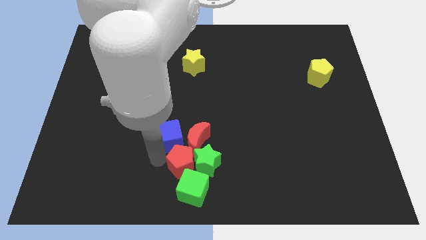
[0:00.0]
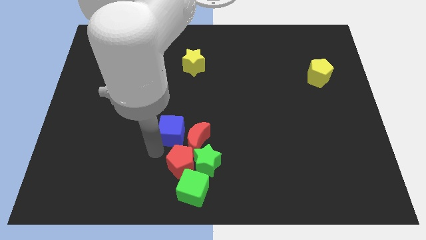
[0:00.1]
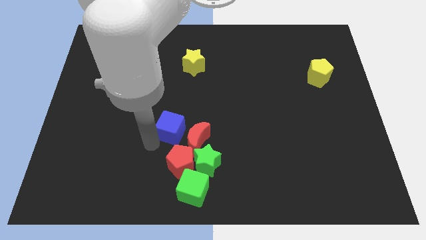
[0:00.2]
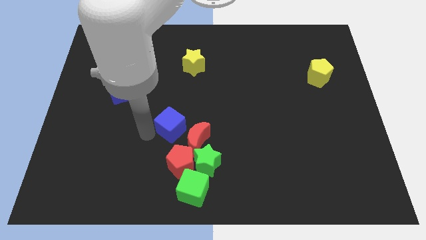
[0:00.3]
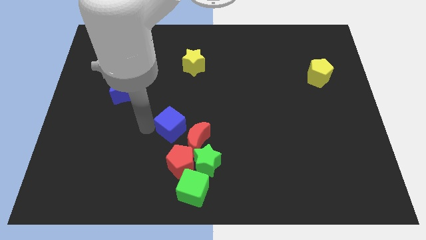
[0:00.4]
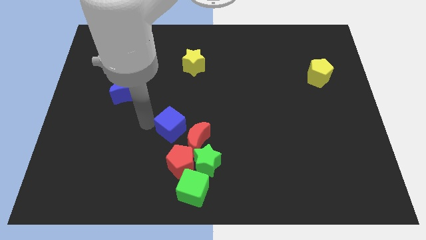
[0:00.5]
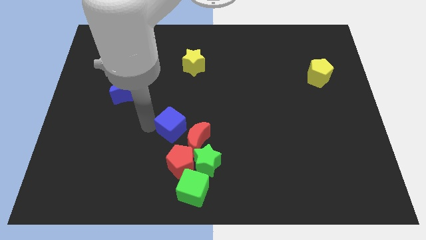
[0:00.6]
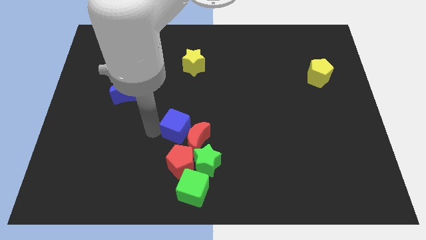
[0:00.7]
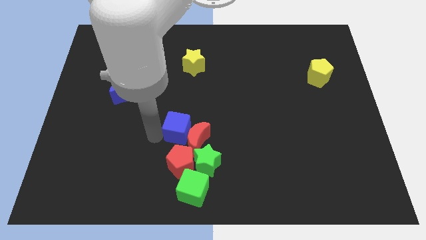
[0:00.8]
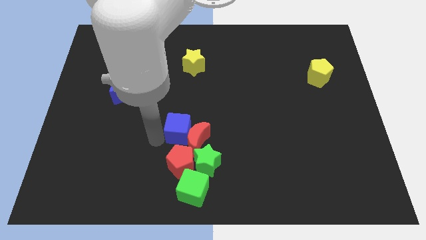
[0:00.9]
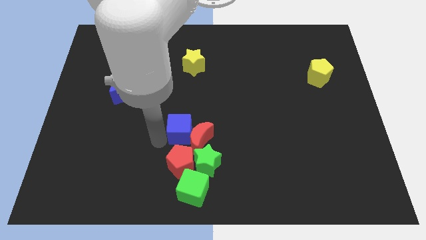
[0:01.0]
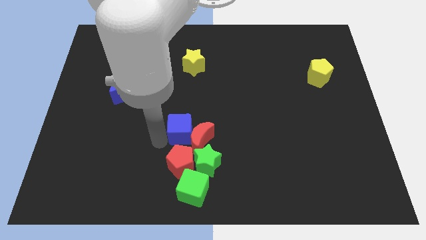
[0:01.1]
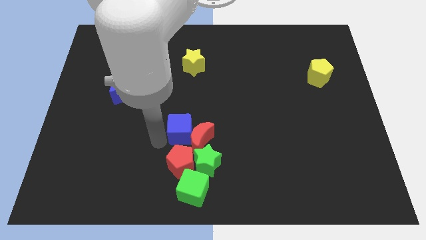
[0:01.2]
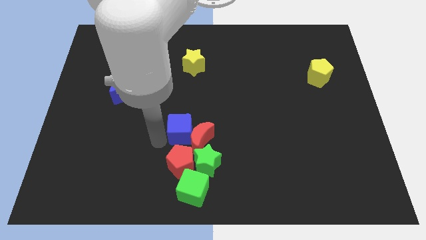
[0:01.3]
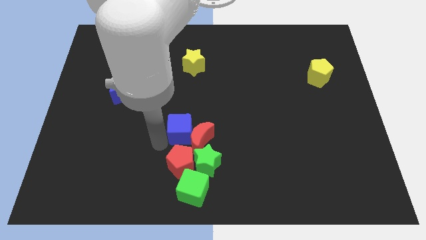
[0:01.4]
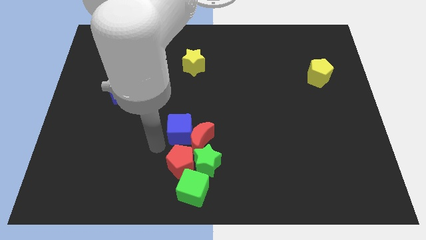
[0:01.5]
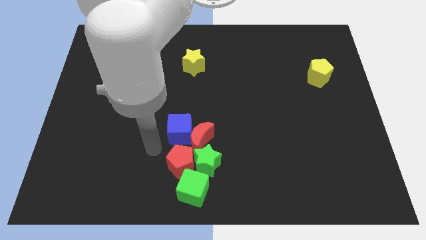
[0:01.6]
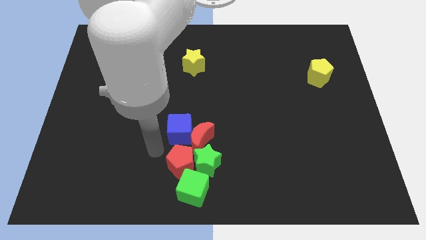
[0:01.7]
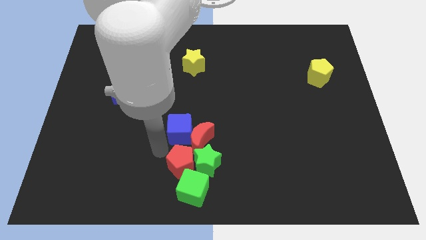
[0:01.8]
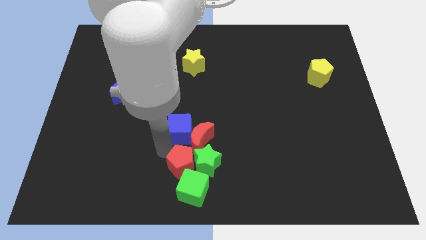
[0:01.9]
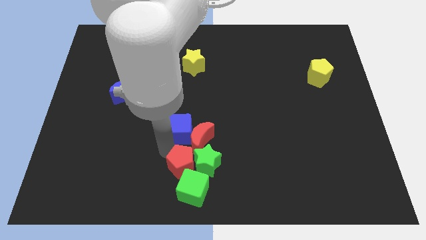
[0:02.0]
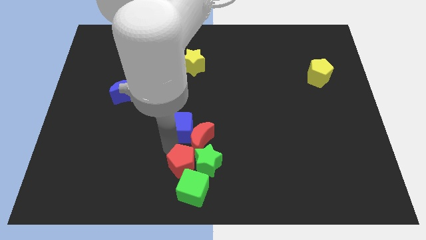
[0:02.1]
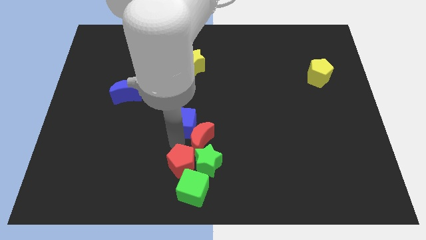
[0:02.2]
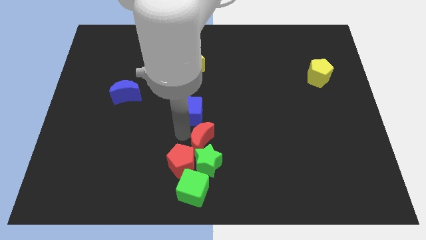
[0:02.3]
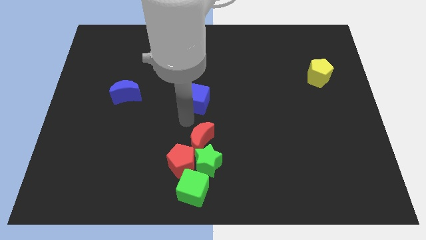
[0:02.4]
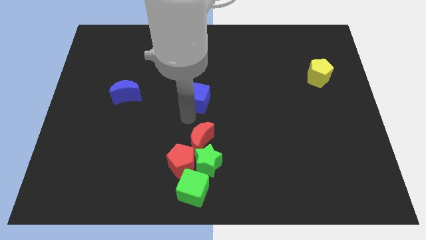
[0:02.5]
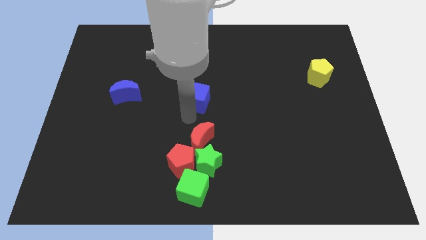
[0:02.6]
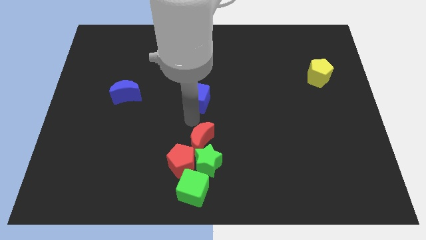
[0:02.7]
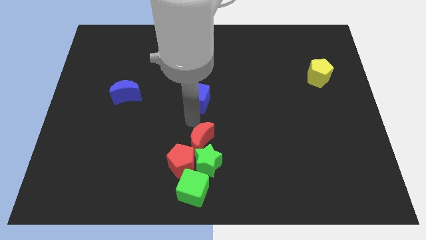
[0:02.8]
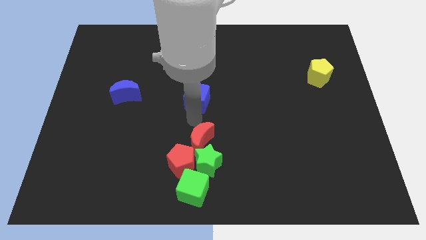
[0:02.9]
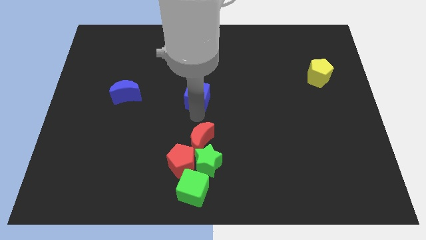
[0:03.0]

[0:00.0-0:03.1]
place the blue cube on top of the red crescent

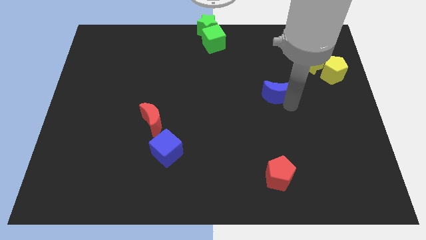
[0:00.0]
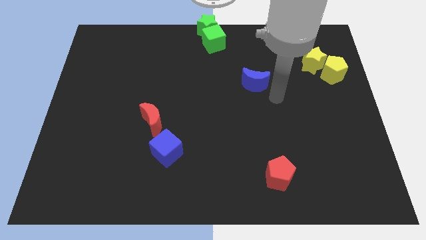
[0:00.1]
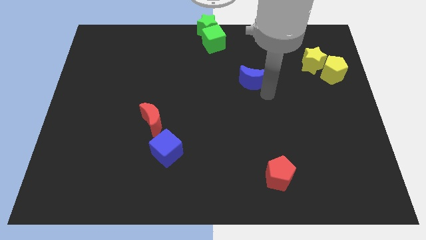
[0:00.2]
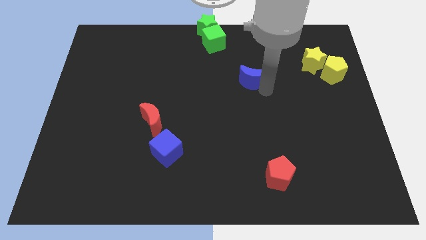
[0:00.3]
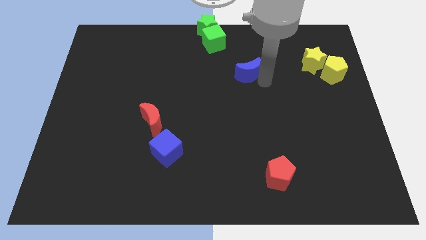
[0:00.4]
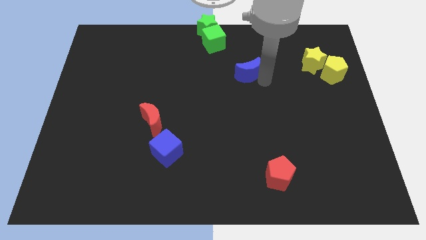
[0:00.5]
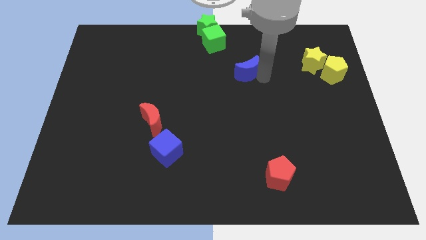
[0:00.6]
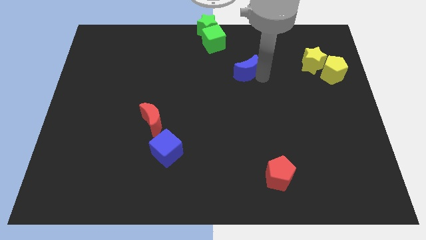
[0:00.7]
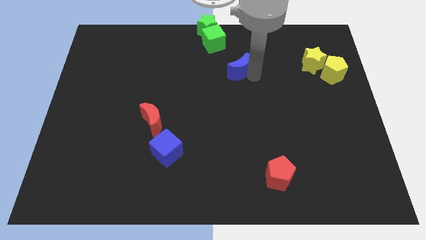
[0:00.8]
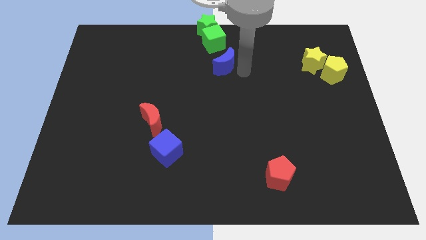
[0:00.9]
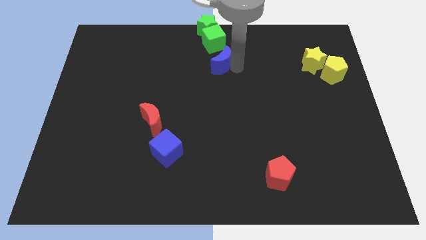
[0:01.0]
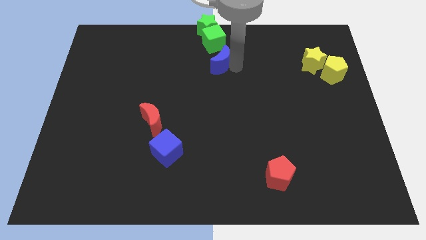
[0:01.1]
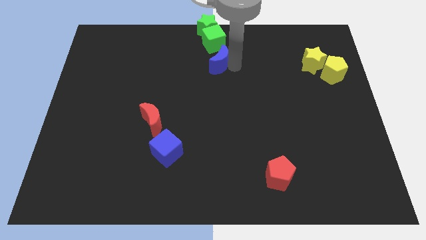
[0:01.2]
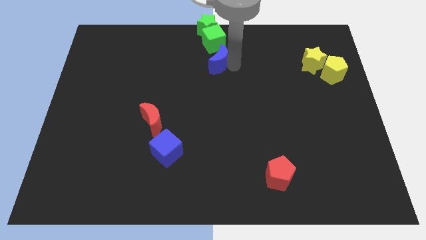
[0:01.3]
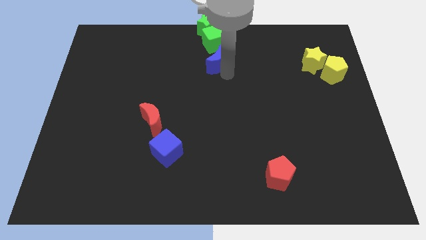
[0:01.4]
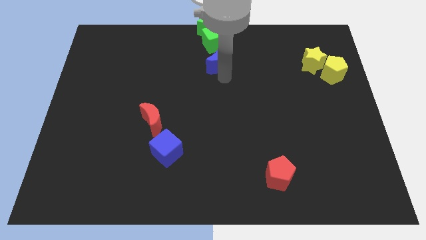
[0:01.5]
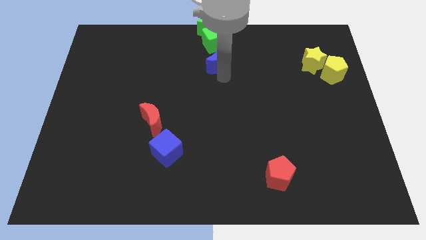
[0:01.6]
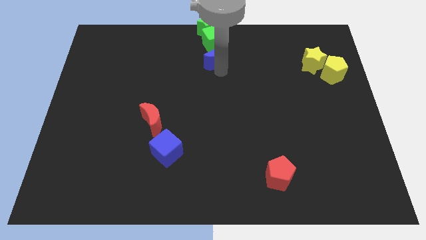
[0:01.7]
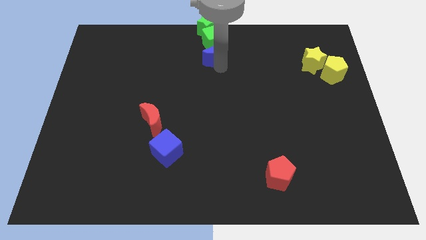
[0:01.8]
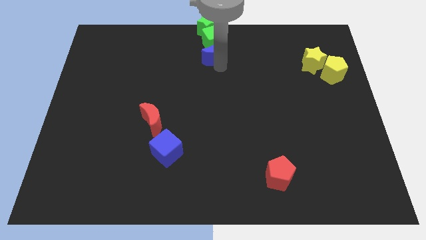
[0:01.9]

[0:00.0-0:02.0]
place the blue moon to the bottom of the green cube

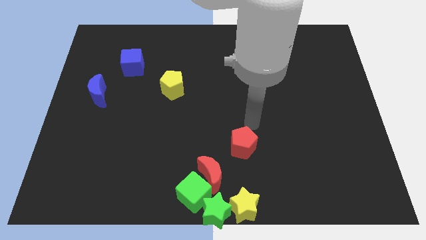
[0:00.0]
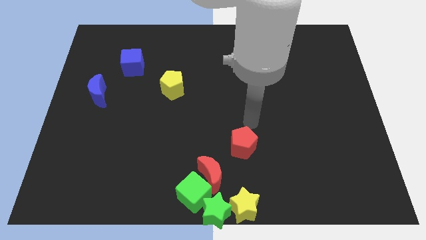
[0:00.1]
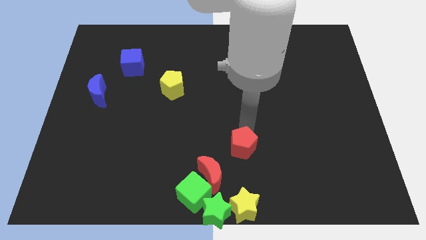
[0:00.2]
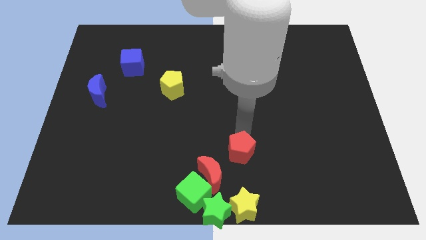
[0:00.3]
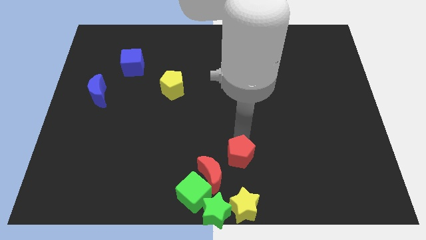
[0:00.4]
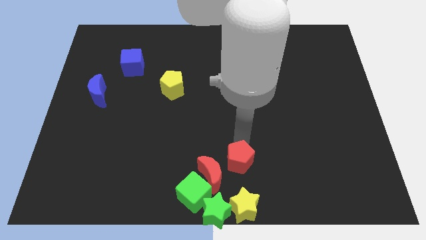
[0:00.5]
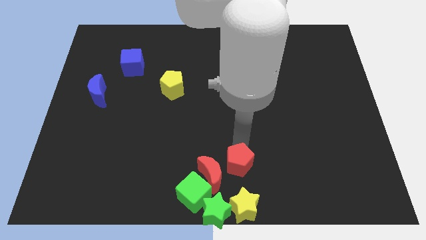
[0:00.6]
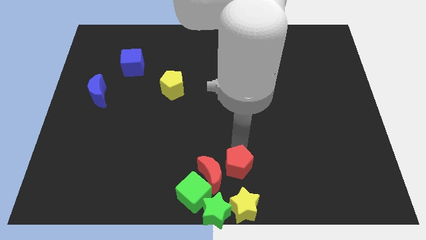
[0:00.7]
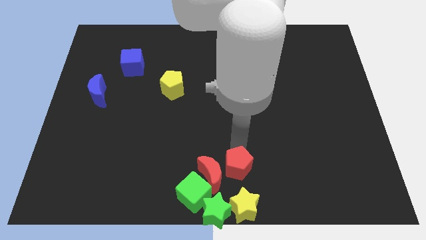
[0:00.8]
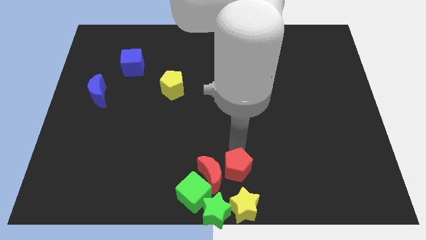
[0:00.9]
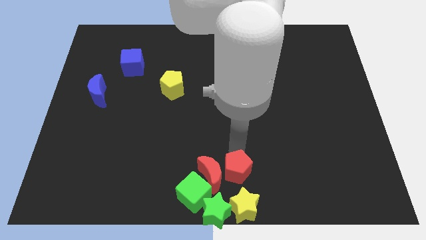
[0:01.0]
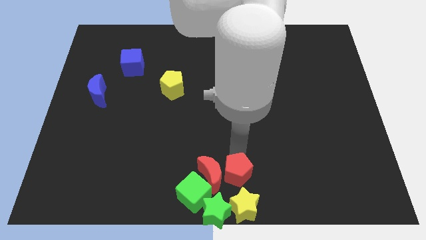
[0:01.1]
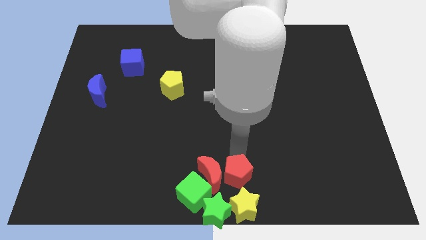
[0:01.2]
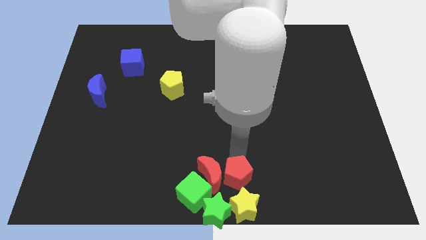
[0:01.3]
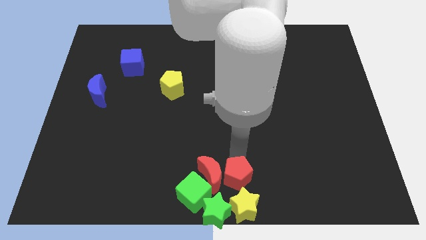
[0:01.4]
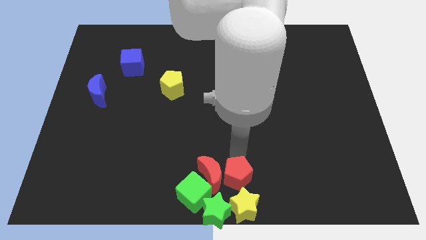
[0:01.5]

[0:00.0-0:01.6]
move the red pentagon into the group of blocks

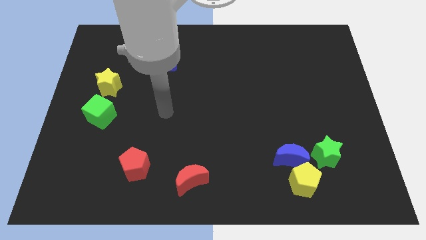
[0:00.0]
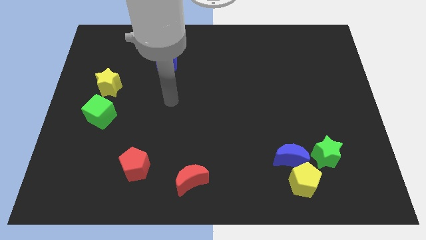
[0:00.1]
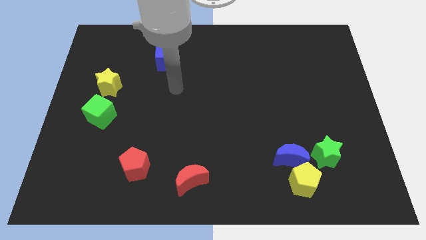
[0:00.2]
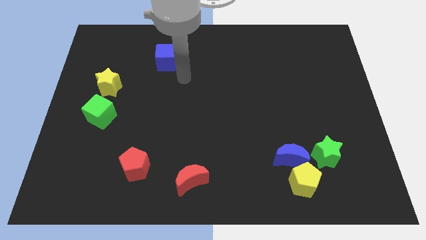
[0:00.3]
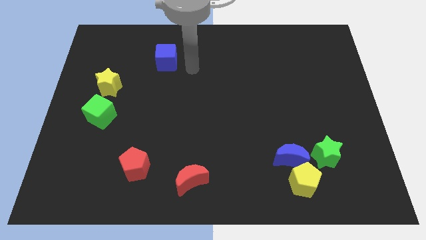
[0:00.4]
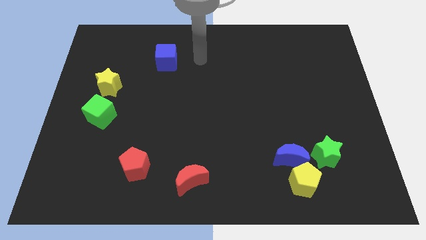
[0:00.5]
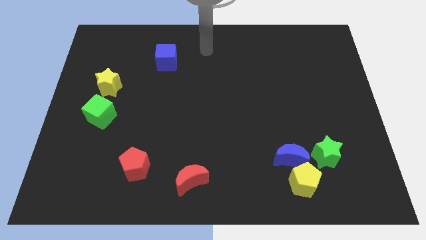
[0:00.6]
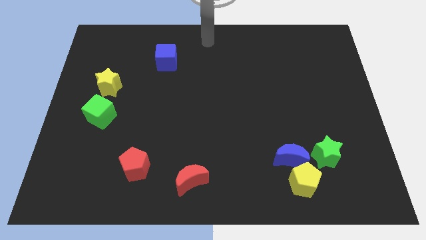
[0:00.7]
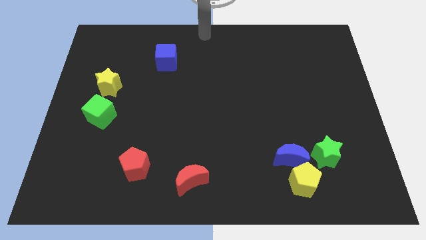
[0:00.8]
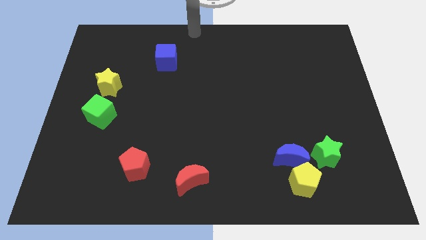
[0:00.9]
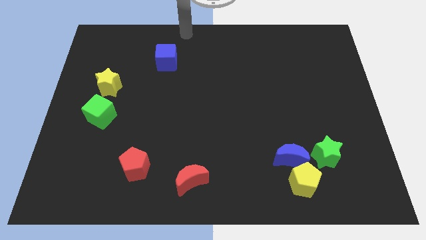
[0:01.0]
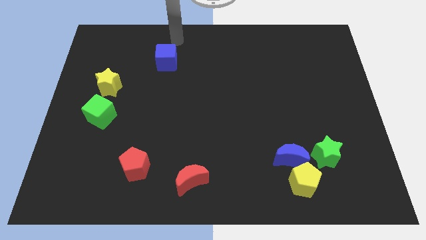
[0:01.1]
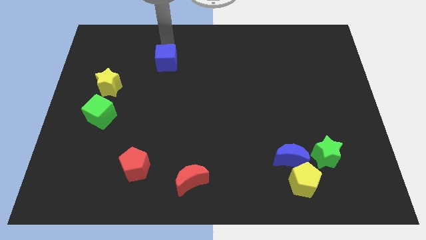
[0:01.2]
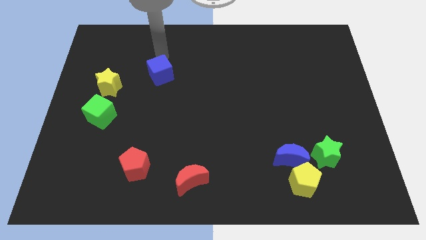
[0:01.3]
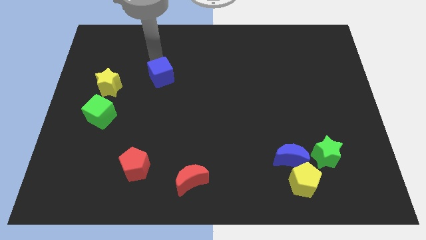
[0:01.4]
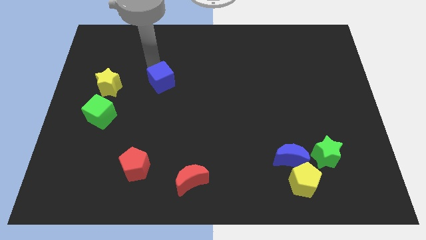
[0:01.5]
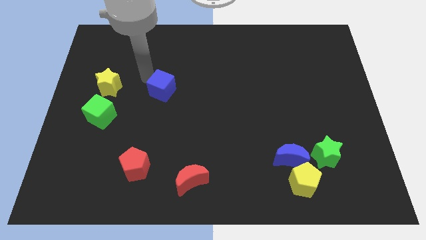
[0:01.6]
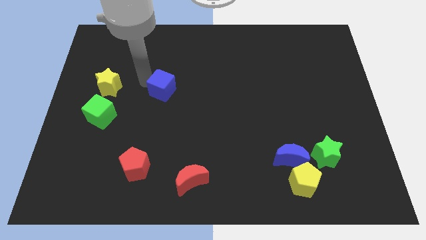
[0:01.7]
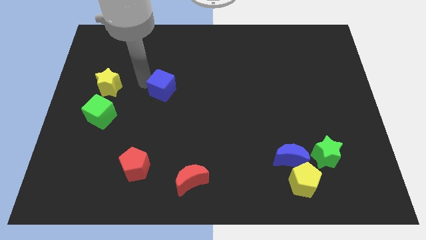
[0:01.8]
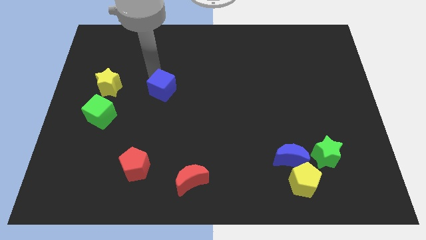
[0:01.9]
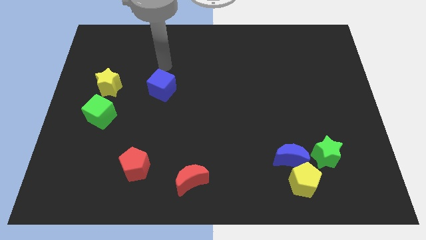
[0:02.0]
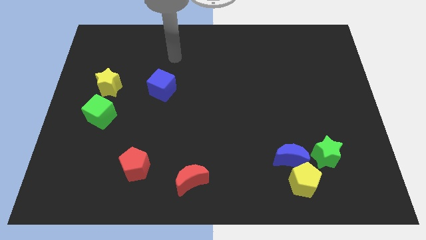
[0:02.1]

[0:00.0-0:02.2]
move the blue cube right to the yellow star

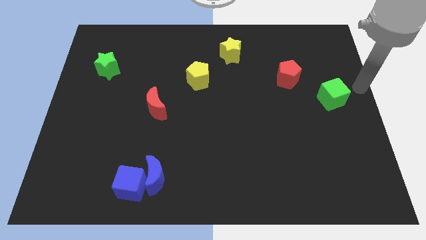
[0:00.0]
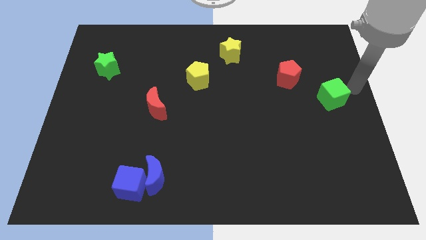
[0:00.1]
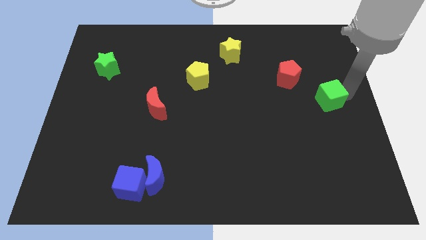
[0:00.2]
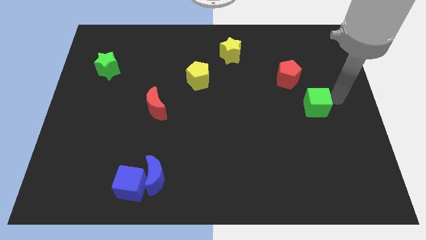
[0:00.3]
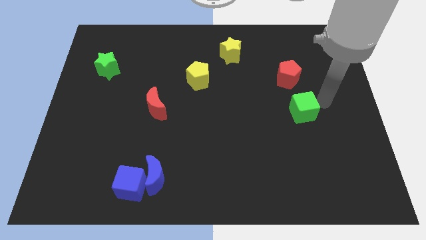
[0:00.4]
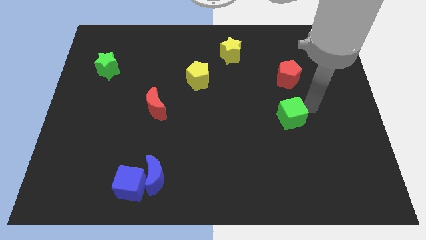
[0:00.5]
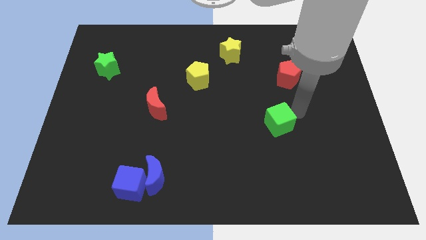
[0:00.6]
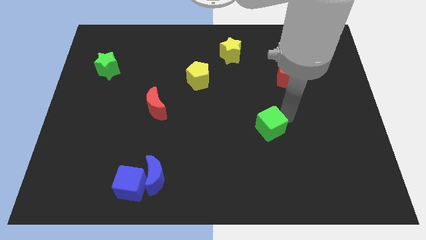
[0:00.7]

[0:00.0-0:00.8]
push the green cube to the bottom of the red pentagon
